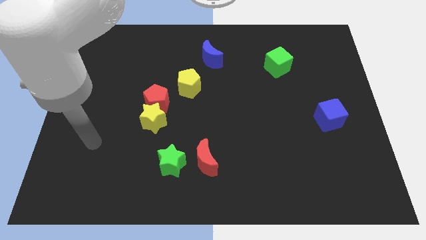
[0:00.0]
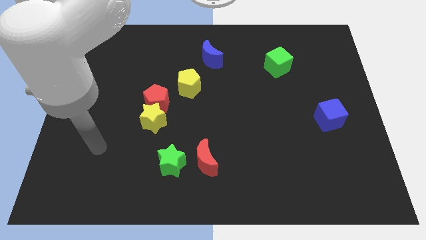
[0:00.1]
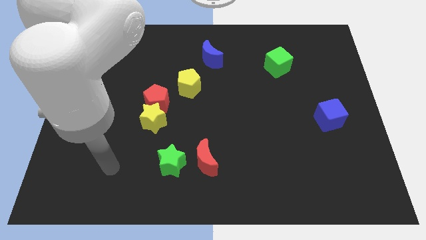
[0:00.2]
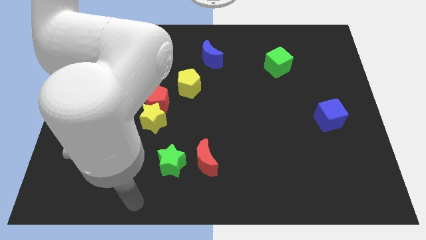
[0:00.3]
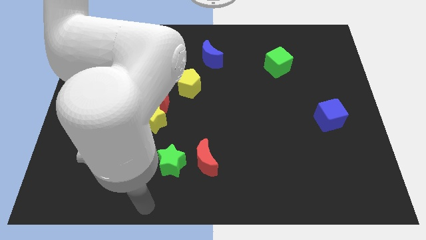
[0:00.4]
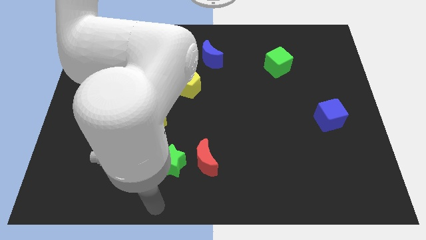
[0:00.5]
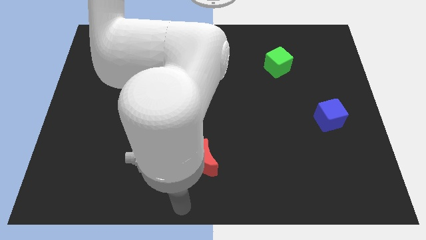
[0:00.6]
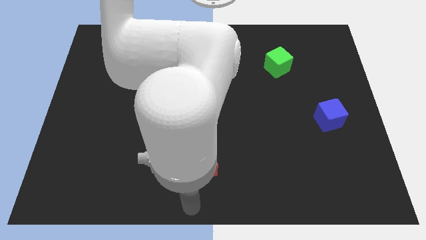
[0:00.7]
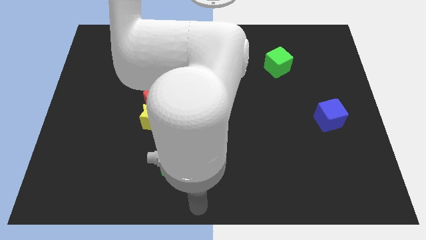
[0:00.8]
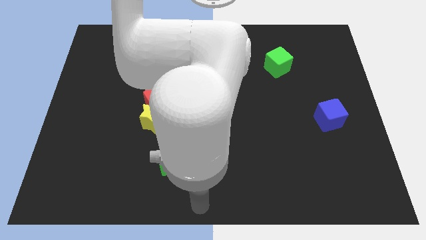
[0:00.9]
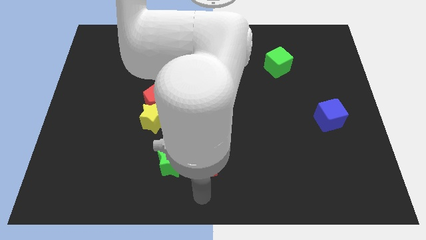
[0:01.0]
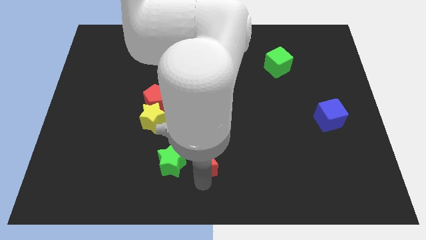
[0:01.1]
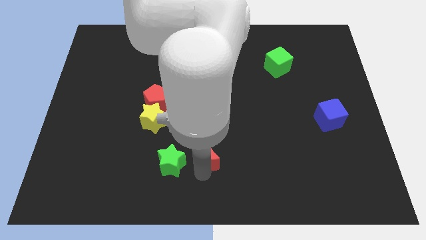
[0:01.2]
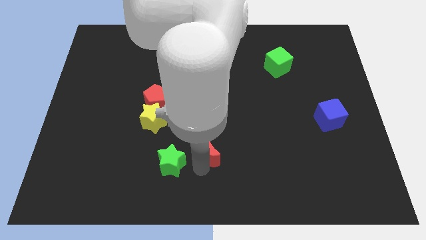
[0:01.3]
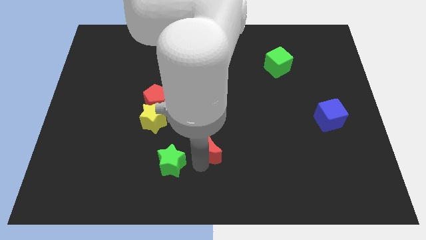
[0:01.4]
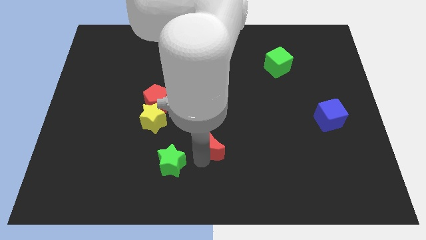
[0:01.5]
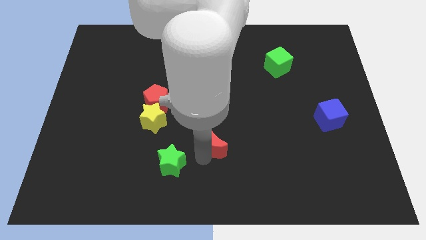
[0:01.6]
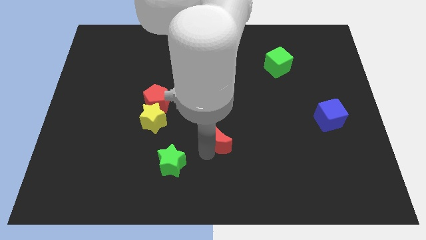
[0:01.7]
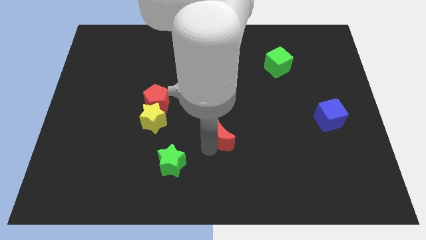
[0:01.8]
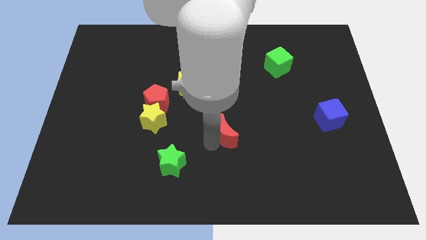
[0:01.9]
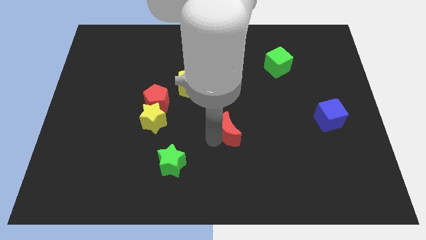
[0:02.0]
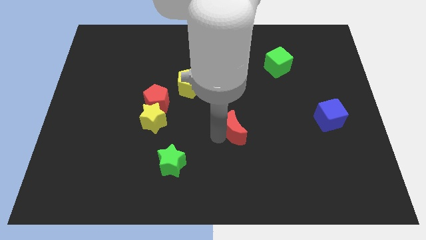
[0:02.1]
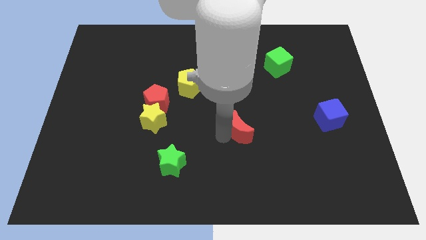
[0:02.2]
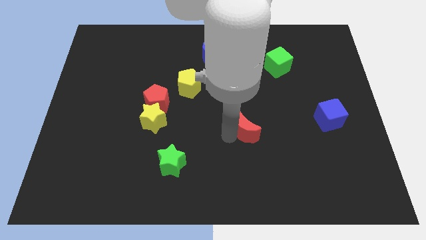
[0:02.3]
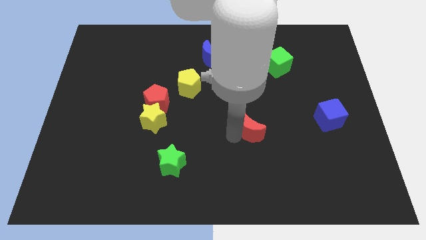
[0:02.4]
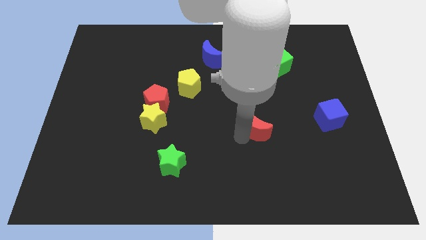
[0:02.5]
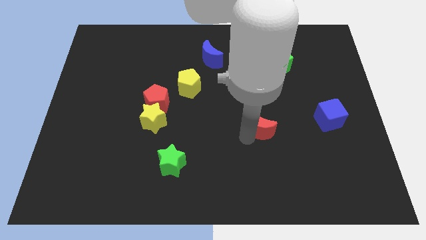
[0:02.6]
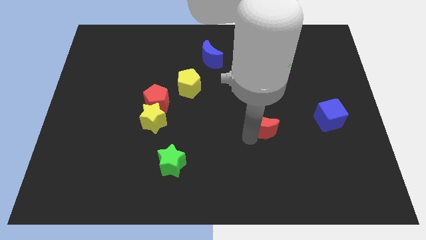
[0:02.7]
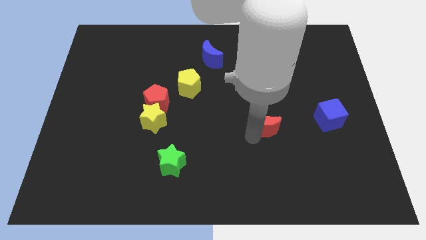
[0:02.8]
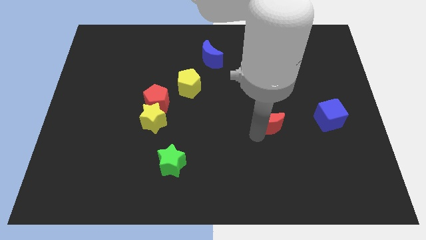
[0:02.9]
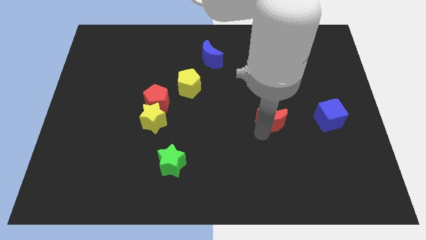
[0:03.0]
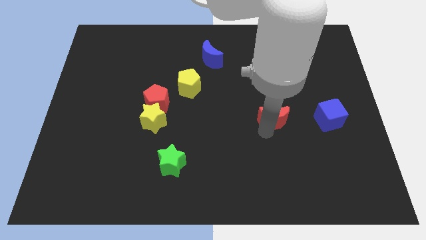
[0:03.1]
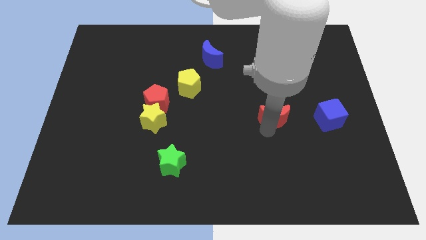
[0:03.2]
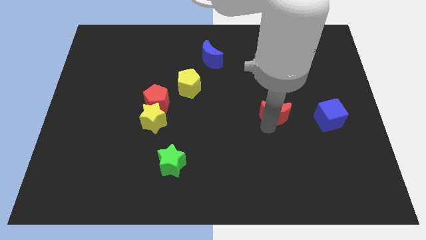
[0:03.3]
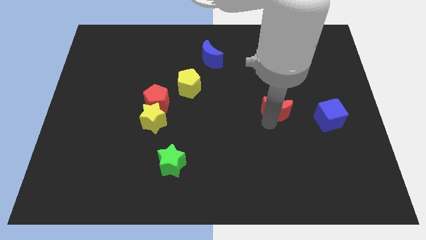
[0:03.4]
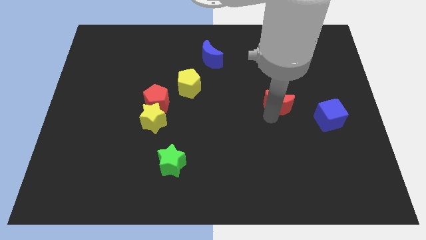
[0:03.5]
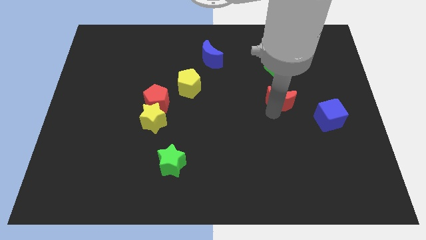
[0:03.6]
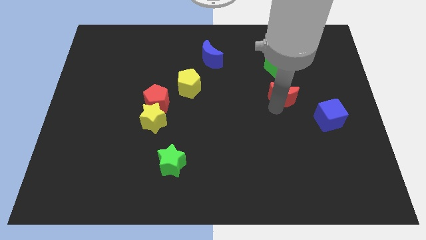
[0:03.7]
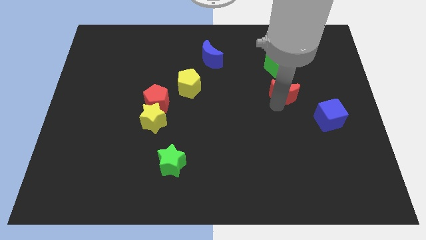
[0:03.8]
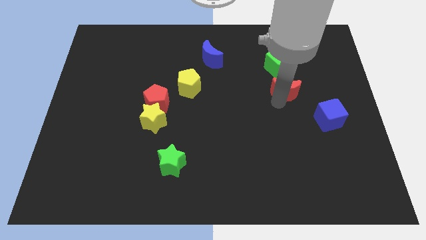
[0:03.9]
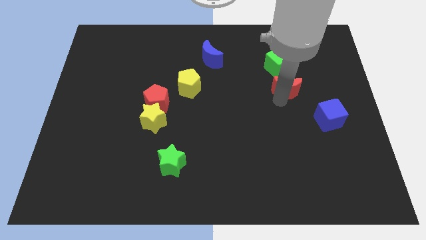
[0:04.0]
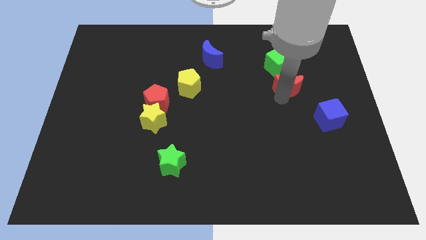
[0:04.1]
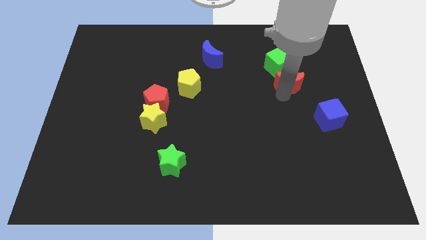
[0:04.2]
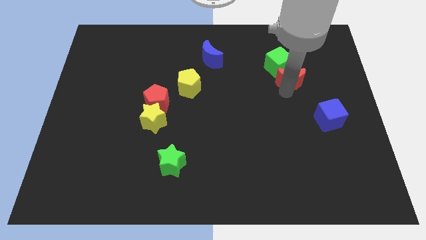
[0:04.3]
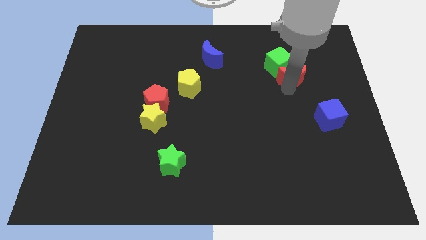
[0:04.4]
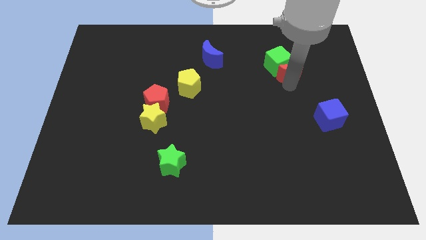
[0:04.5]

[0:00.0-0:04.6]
slide the red moon to the green cube

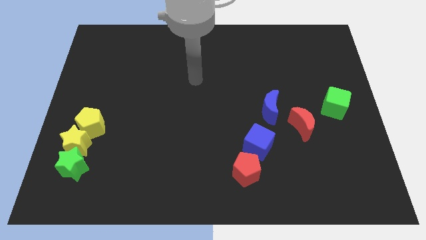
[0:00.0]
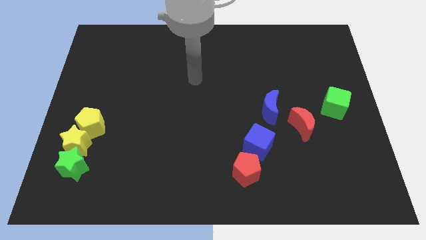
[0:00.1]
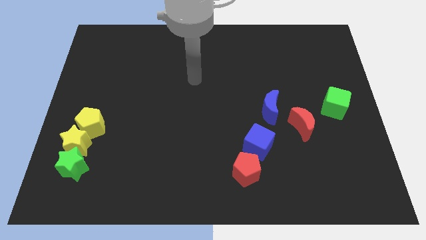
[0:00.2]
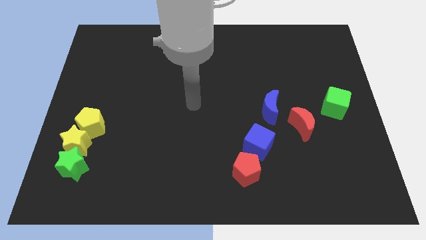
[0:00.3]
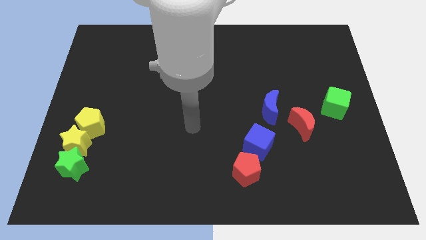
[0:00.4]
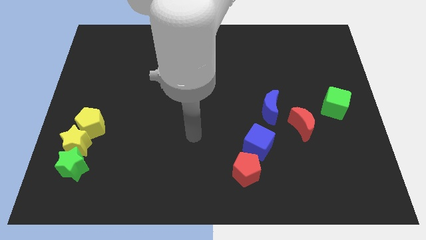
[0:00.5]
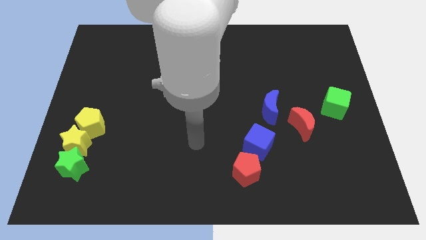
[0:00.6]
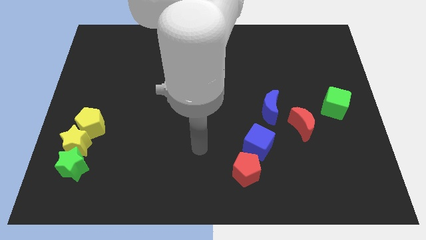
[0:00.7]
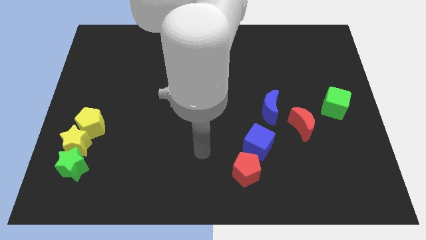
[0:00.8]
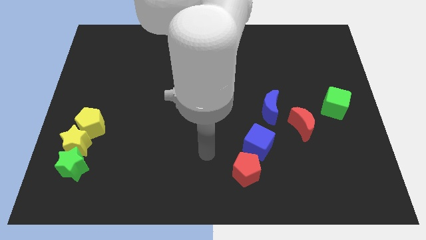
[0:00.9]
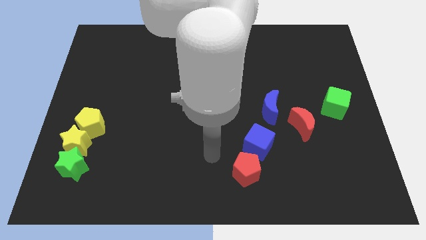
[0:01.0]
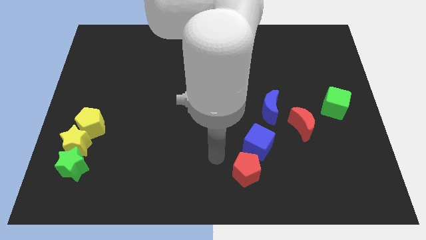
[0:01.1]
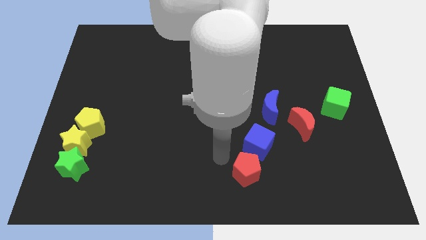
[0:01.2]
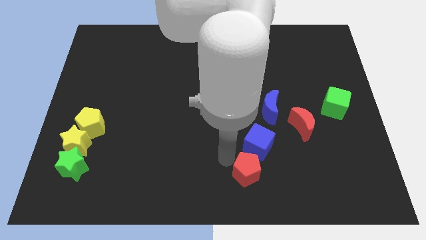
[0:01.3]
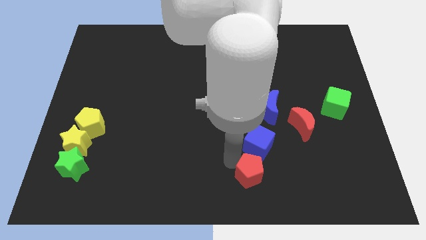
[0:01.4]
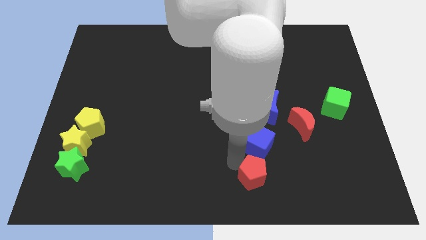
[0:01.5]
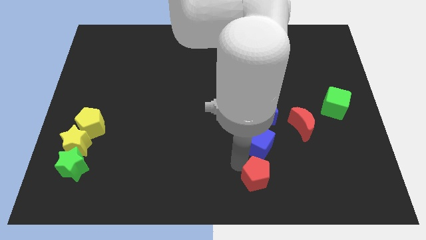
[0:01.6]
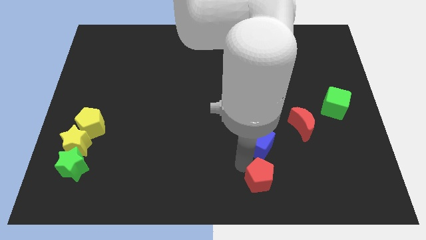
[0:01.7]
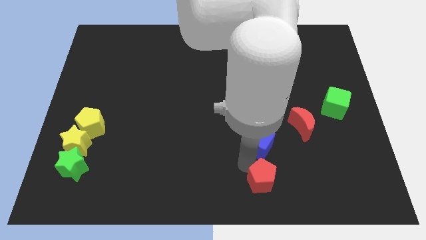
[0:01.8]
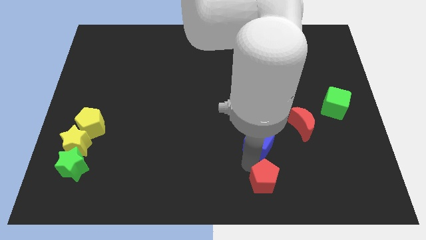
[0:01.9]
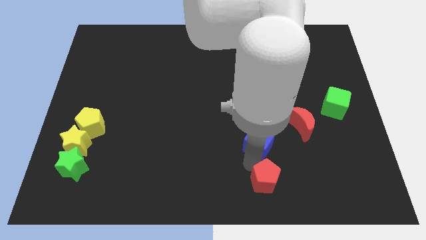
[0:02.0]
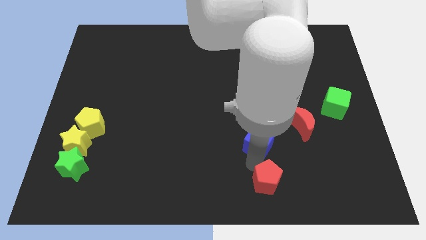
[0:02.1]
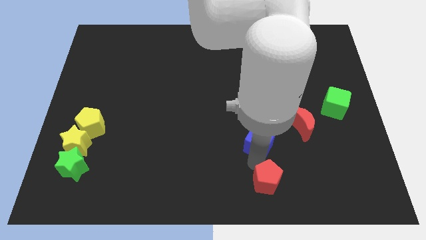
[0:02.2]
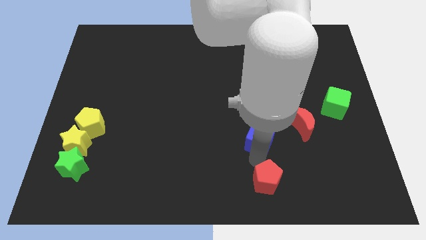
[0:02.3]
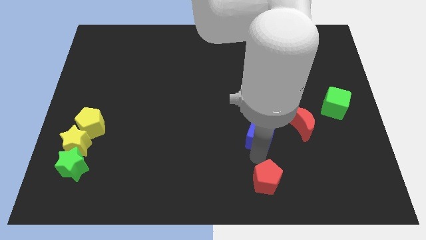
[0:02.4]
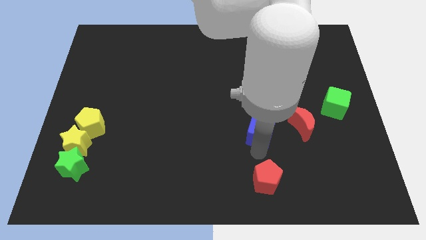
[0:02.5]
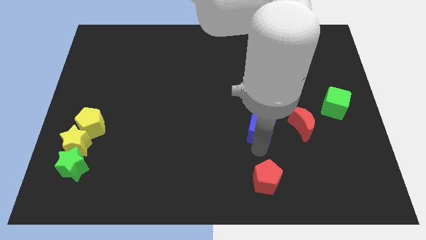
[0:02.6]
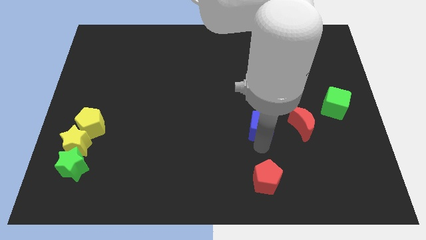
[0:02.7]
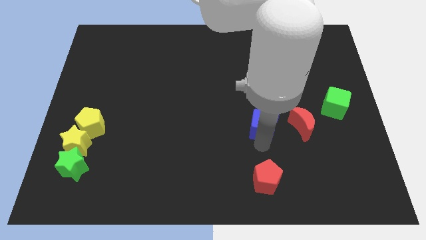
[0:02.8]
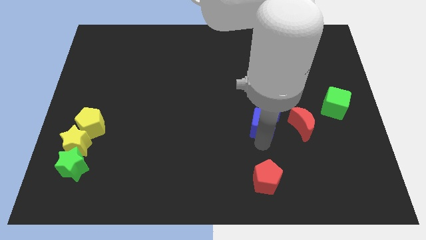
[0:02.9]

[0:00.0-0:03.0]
put the blue cube towards the blue moon

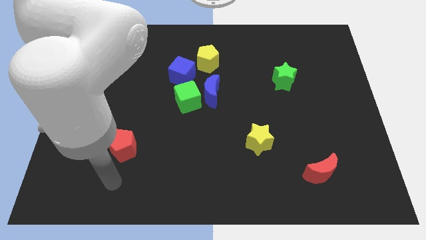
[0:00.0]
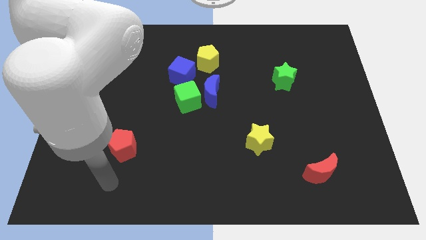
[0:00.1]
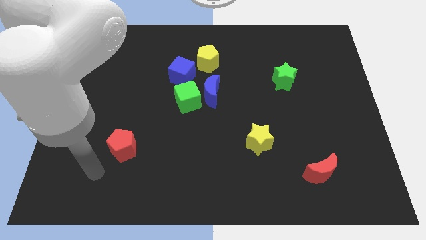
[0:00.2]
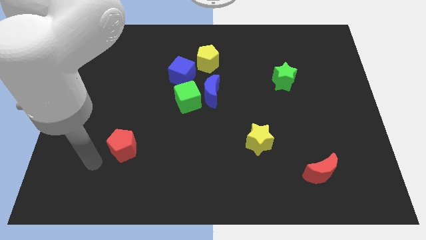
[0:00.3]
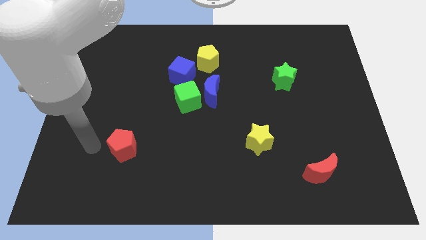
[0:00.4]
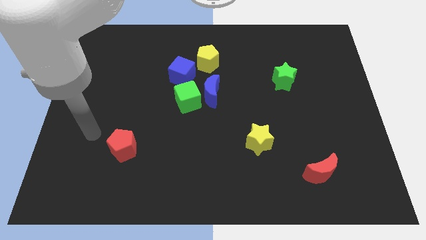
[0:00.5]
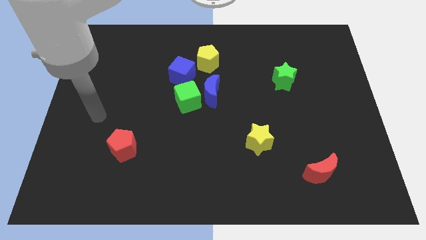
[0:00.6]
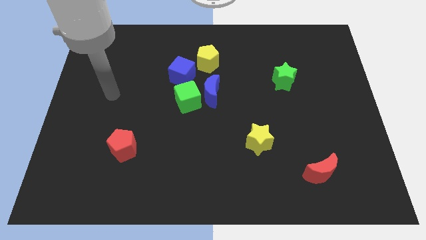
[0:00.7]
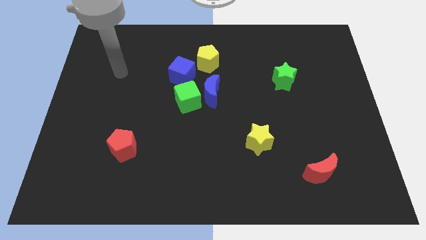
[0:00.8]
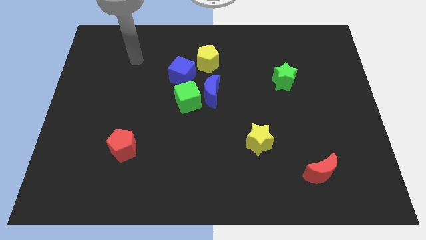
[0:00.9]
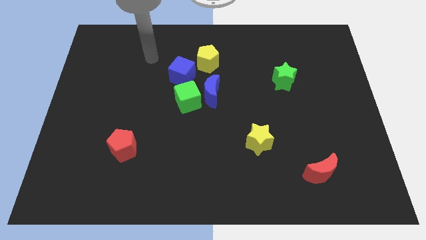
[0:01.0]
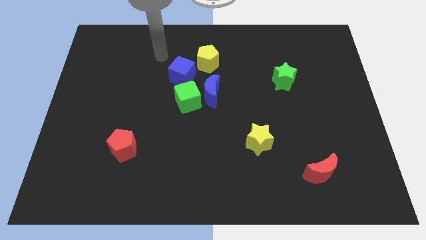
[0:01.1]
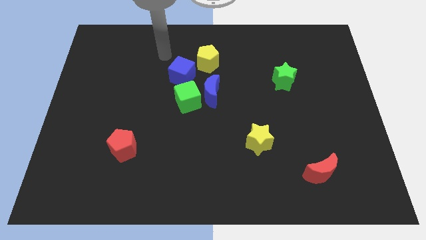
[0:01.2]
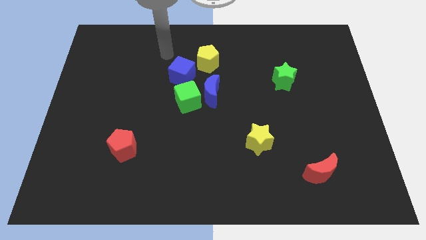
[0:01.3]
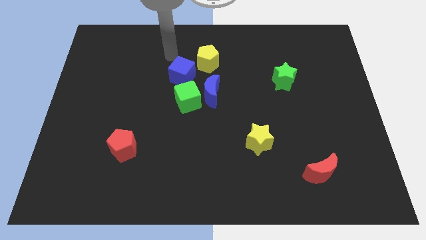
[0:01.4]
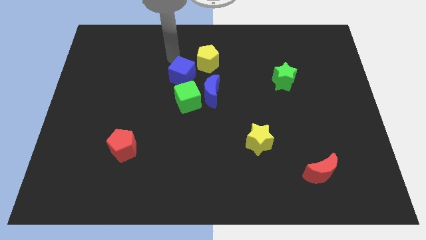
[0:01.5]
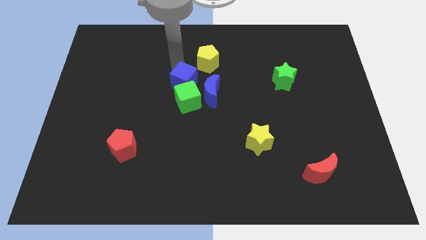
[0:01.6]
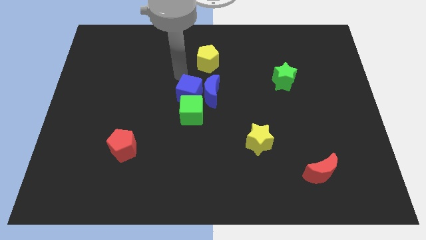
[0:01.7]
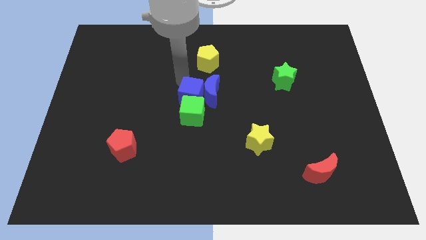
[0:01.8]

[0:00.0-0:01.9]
move the blue cube next to the green cube
